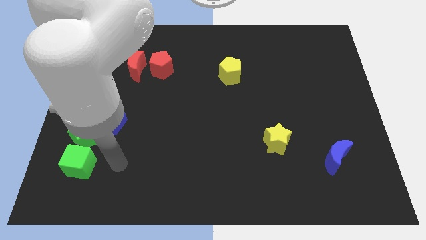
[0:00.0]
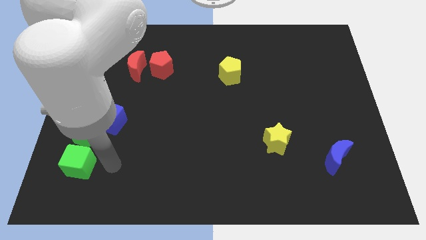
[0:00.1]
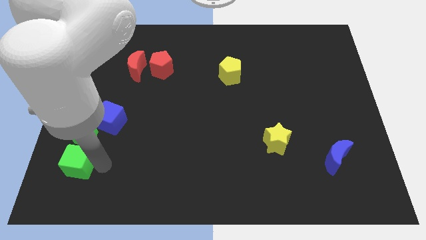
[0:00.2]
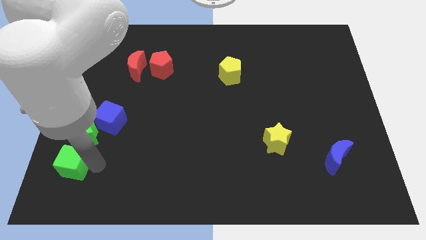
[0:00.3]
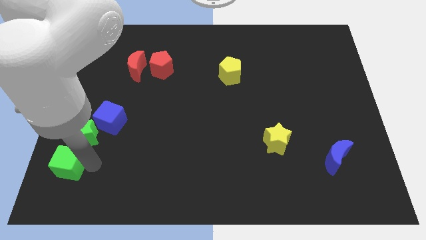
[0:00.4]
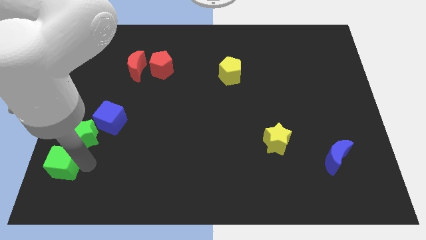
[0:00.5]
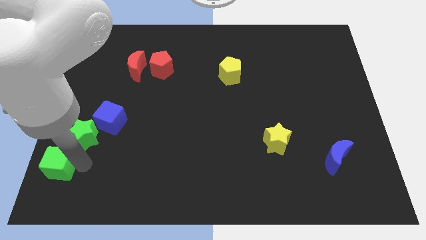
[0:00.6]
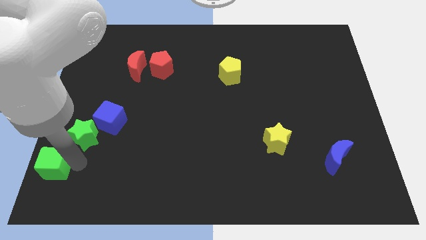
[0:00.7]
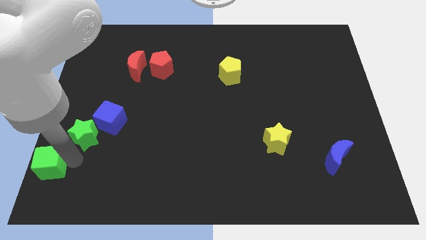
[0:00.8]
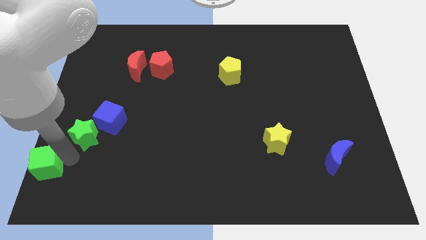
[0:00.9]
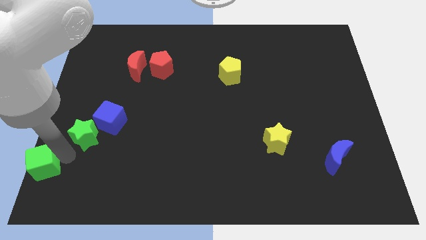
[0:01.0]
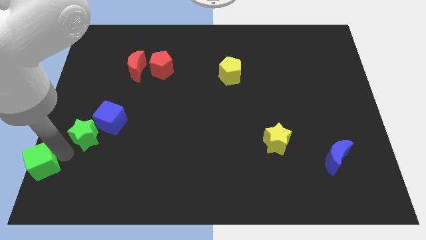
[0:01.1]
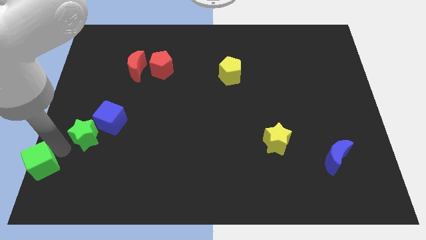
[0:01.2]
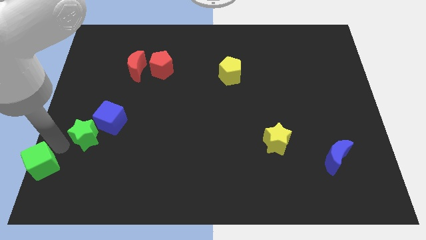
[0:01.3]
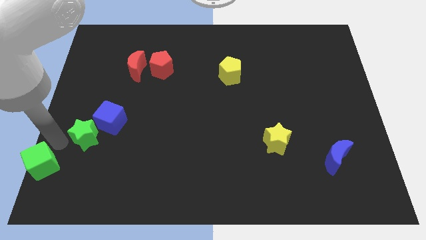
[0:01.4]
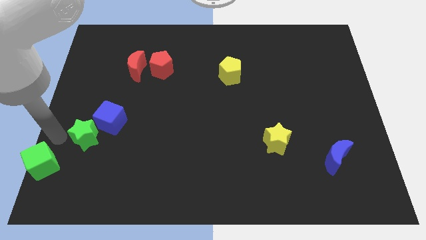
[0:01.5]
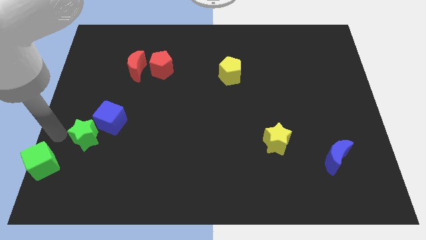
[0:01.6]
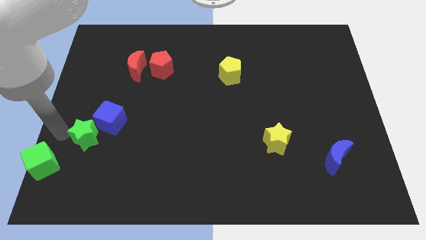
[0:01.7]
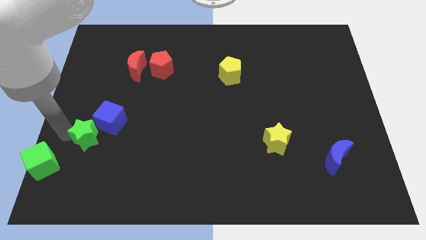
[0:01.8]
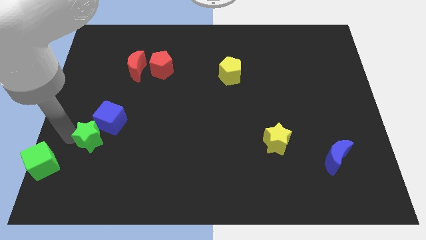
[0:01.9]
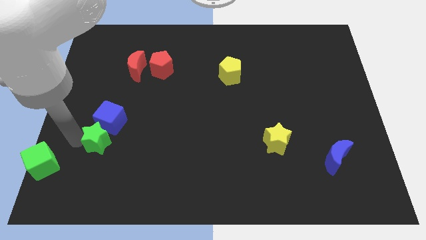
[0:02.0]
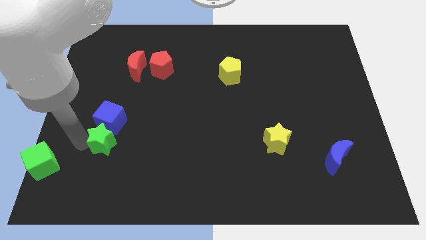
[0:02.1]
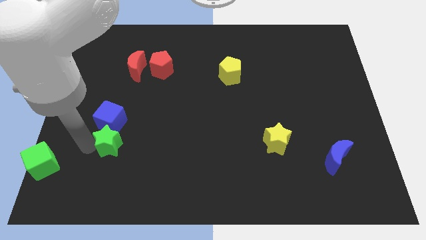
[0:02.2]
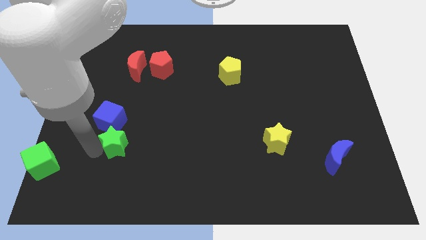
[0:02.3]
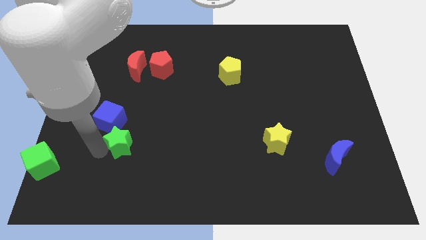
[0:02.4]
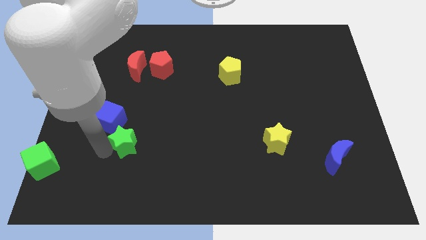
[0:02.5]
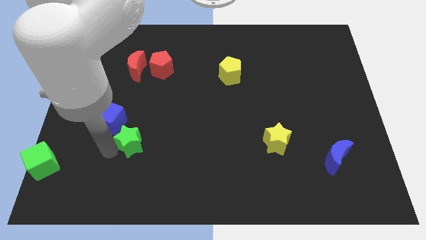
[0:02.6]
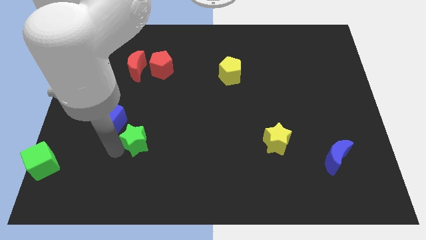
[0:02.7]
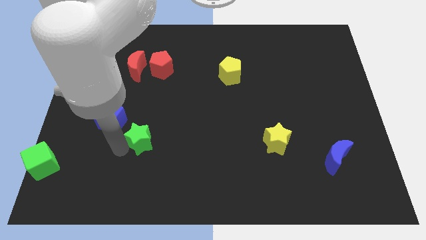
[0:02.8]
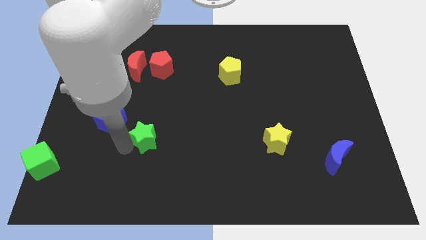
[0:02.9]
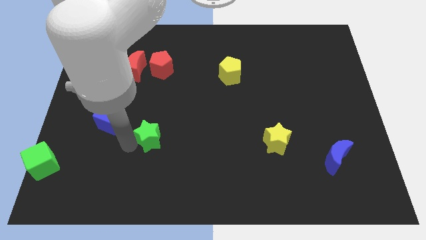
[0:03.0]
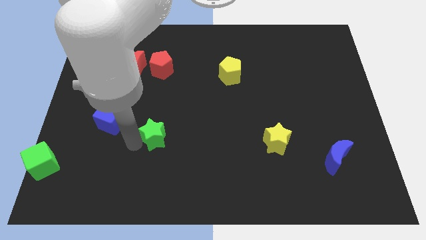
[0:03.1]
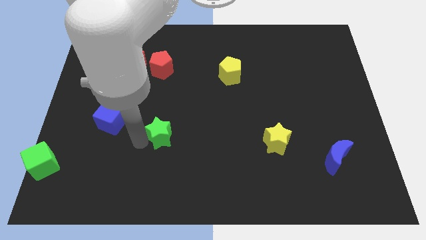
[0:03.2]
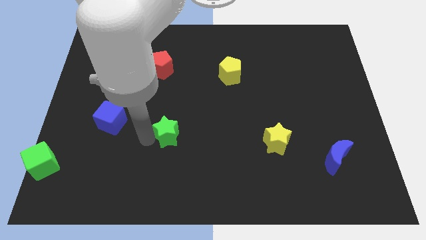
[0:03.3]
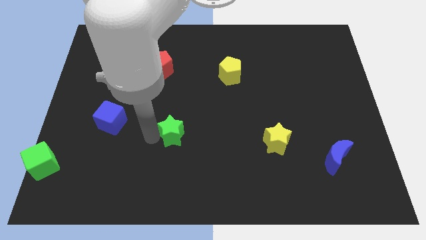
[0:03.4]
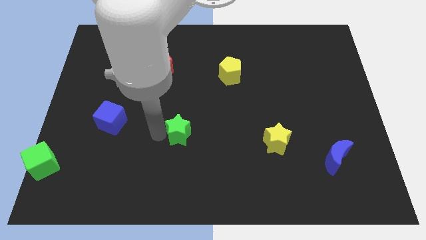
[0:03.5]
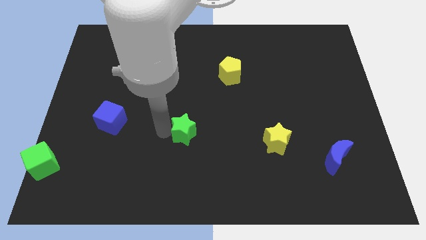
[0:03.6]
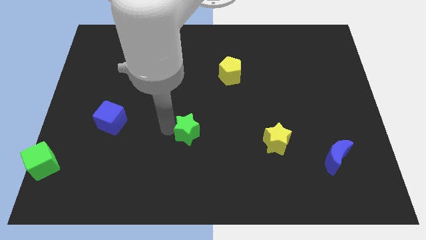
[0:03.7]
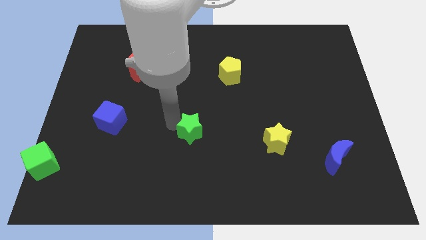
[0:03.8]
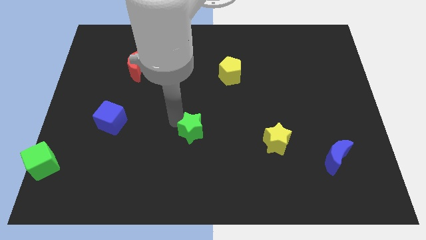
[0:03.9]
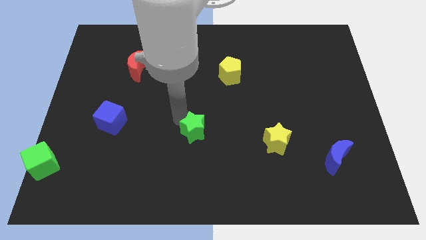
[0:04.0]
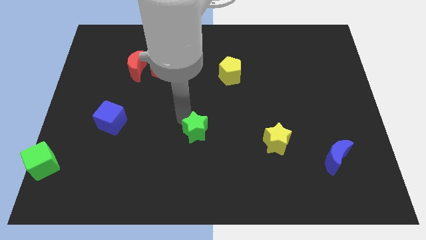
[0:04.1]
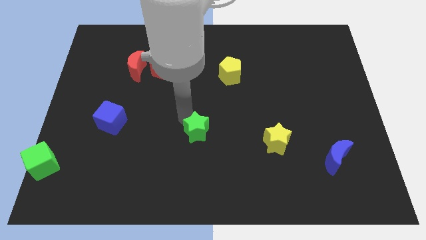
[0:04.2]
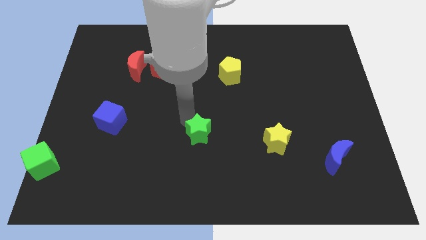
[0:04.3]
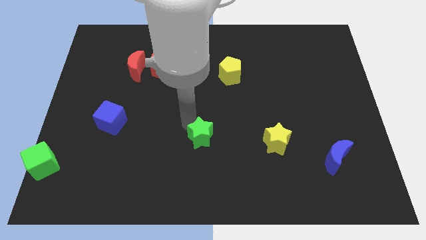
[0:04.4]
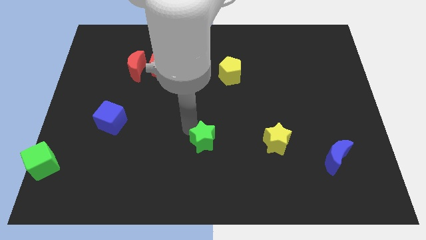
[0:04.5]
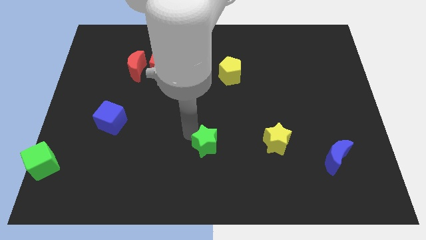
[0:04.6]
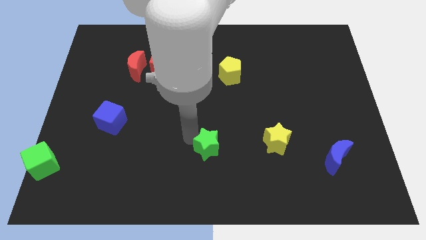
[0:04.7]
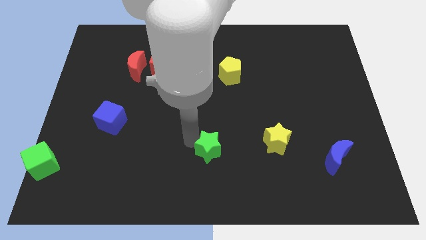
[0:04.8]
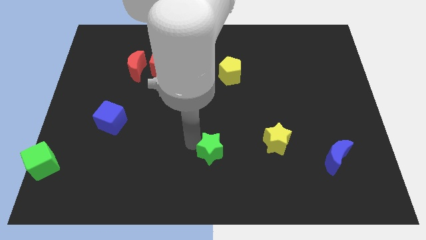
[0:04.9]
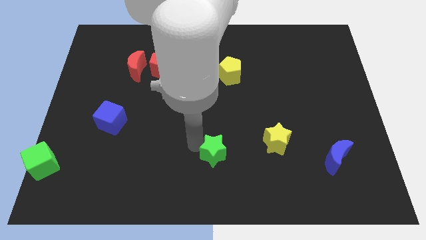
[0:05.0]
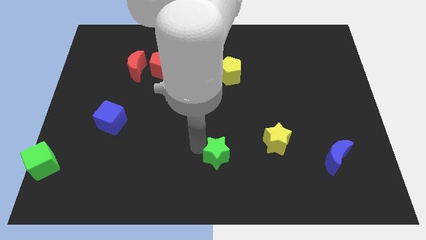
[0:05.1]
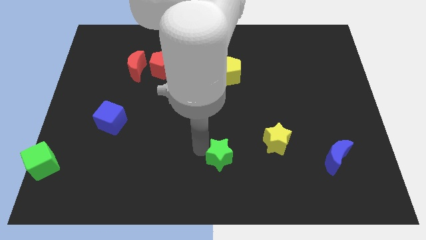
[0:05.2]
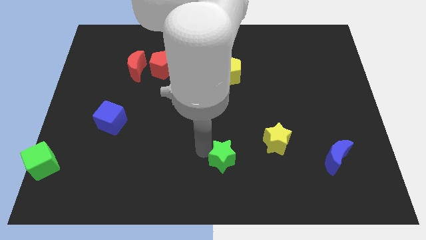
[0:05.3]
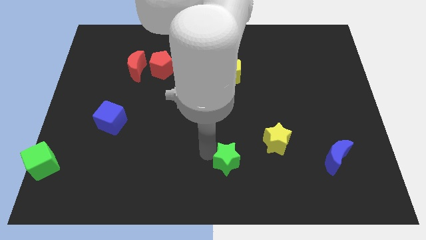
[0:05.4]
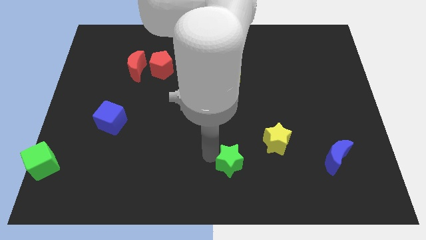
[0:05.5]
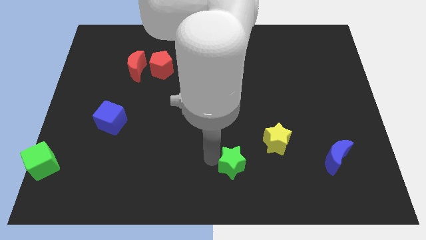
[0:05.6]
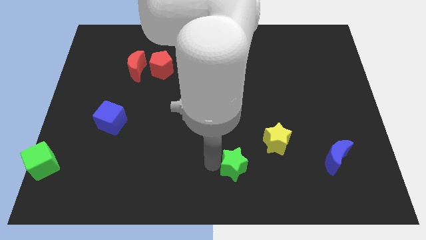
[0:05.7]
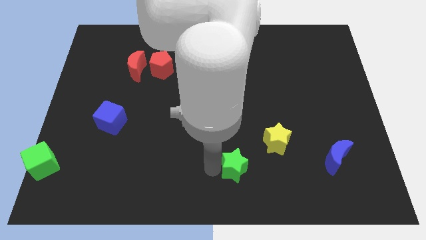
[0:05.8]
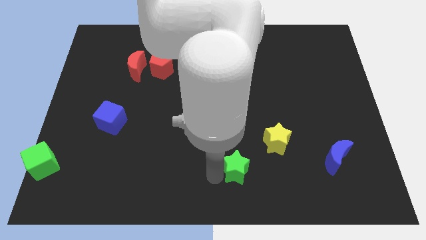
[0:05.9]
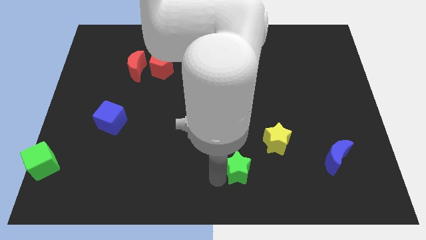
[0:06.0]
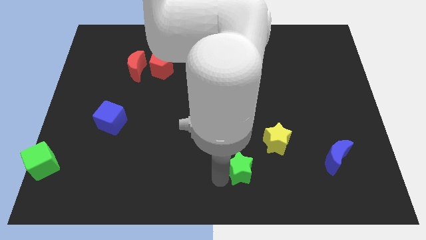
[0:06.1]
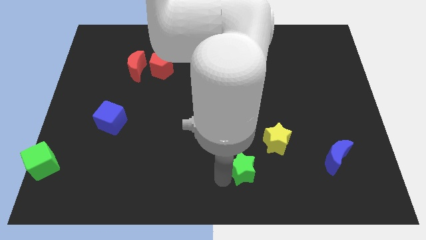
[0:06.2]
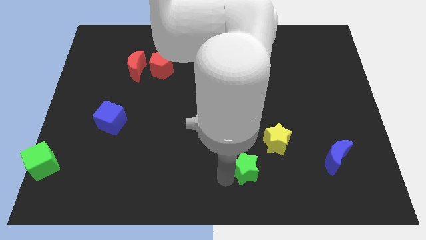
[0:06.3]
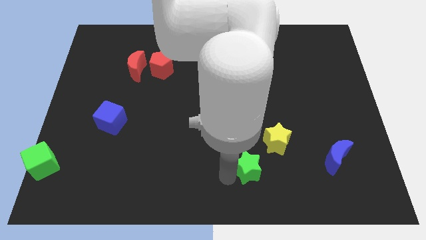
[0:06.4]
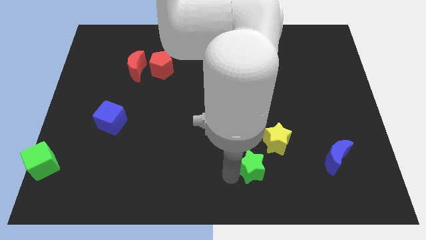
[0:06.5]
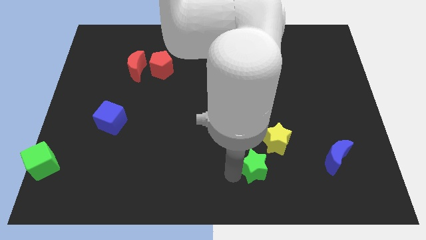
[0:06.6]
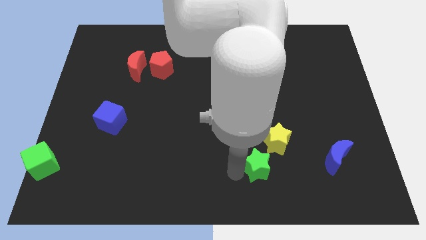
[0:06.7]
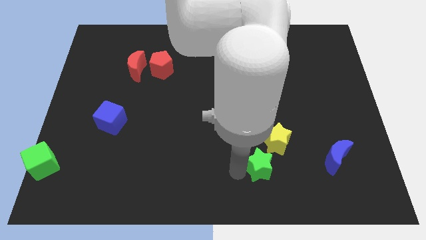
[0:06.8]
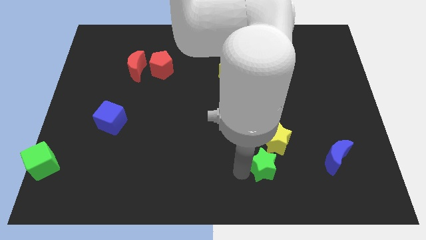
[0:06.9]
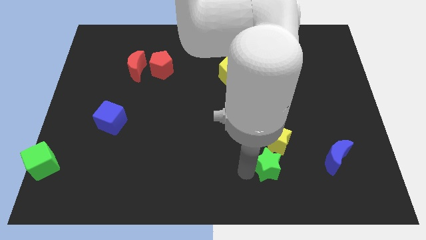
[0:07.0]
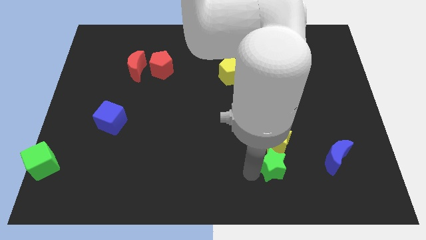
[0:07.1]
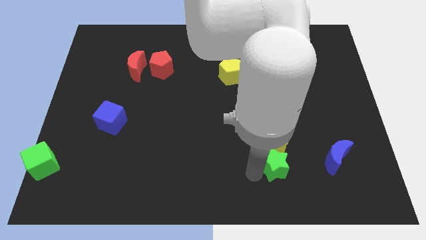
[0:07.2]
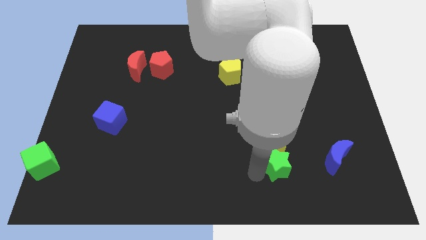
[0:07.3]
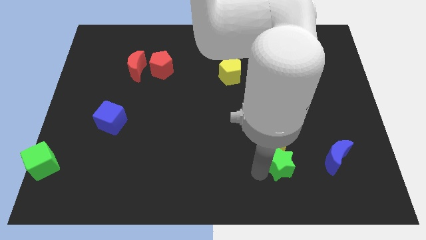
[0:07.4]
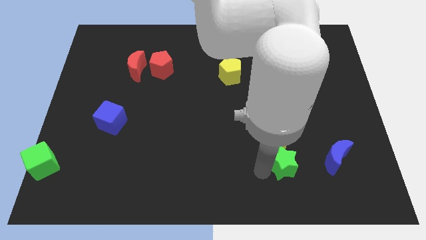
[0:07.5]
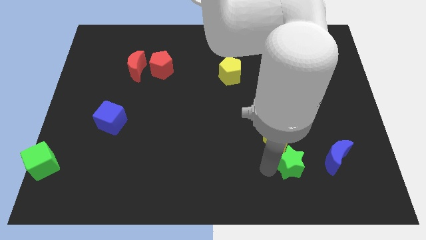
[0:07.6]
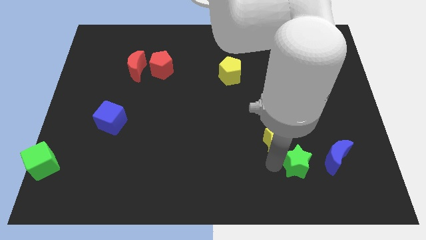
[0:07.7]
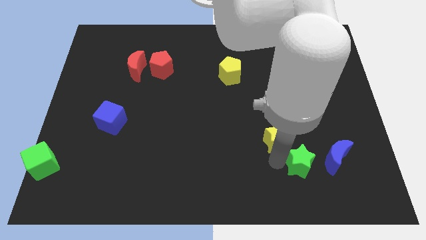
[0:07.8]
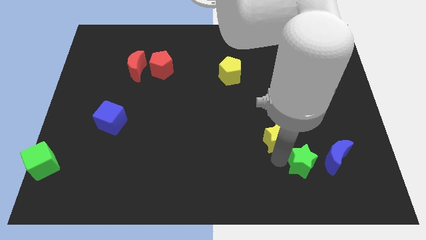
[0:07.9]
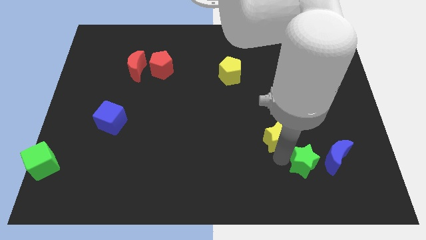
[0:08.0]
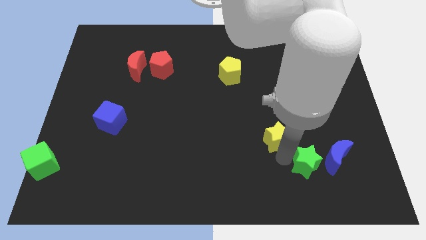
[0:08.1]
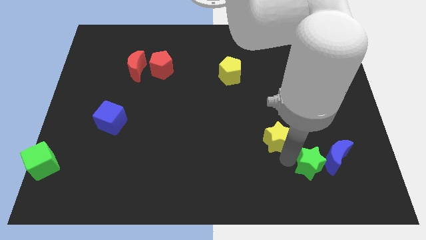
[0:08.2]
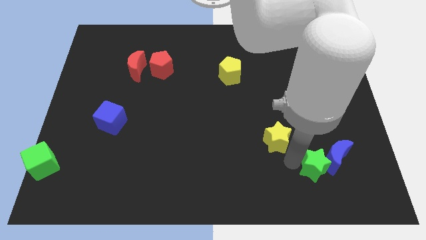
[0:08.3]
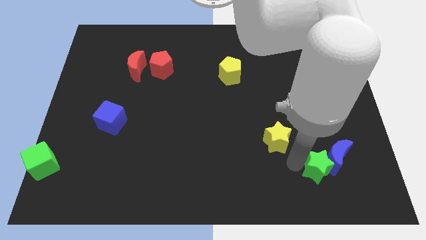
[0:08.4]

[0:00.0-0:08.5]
push the green star next to the blue moon
